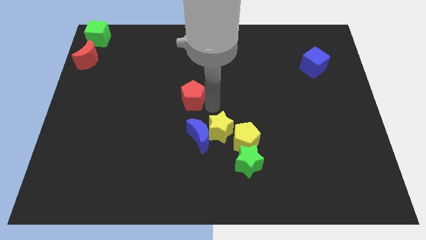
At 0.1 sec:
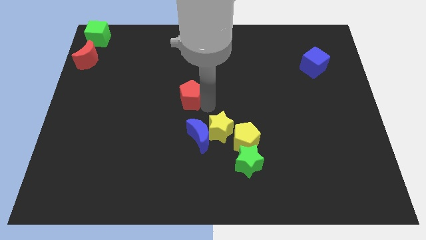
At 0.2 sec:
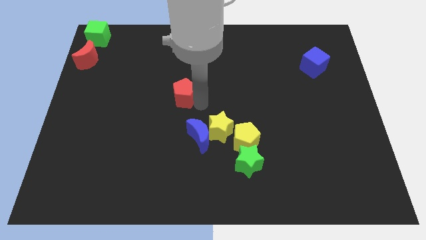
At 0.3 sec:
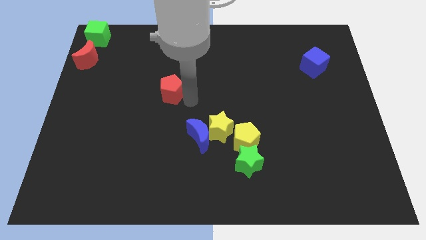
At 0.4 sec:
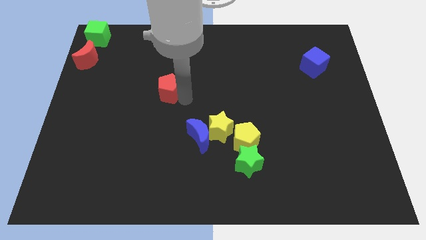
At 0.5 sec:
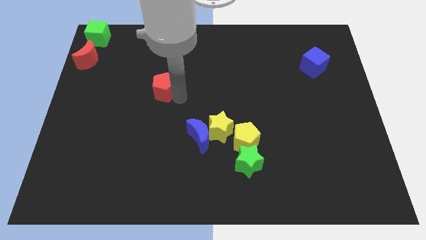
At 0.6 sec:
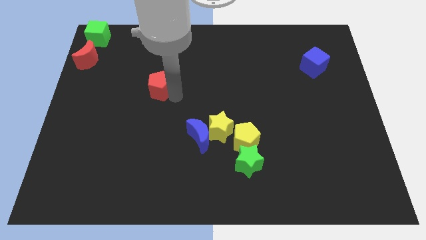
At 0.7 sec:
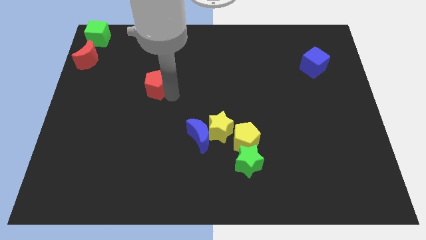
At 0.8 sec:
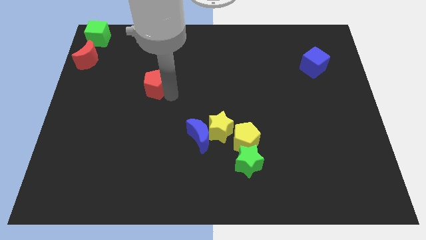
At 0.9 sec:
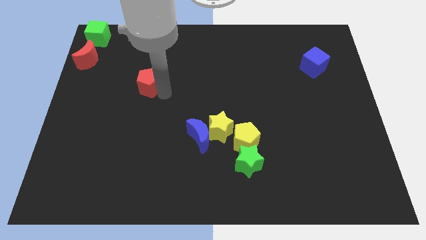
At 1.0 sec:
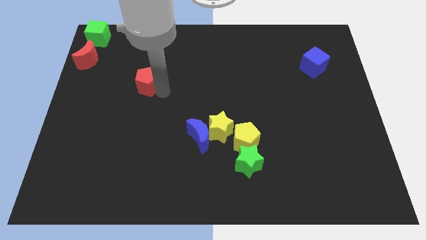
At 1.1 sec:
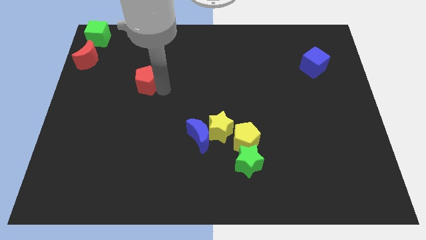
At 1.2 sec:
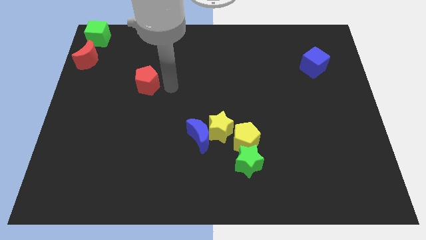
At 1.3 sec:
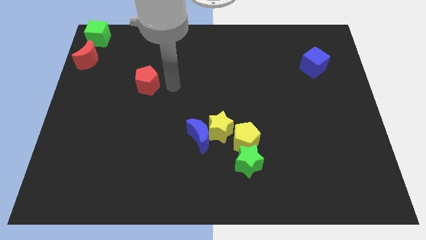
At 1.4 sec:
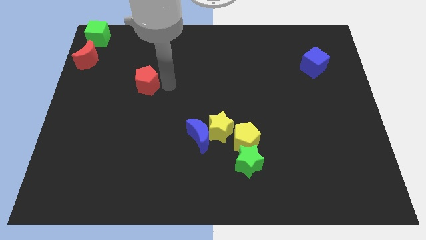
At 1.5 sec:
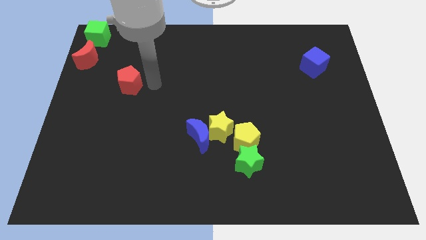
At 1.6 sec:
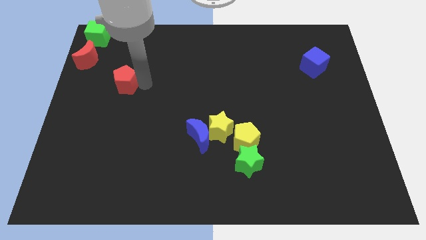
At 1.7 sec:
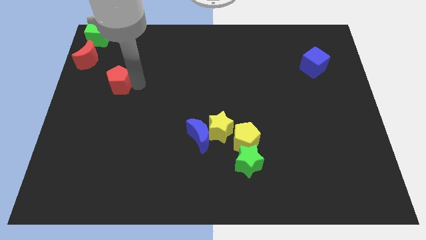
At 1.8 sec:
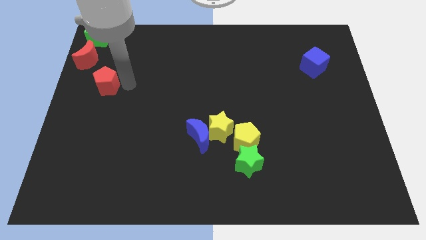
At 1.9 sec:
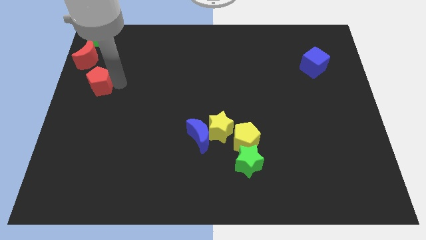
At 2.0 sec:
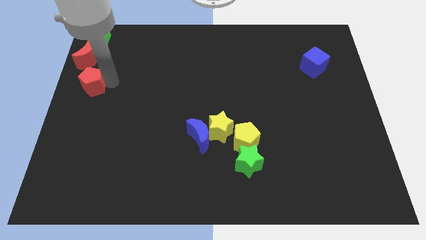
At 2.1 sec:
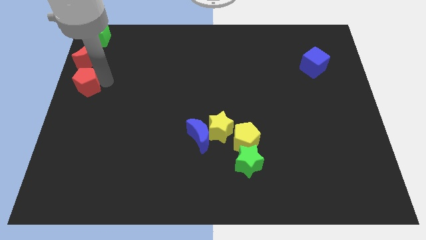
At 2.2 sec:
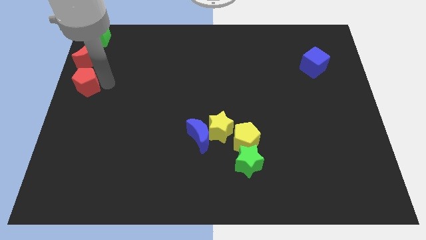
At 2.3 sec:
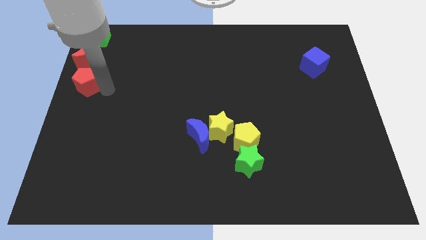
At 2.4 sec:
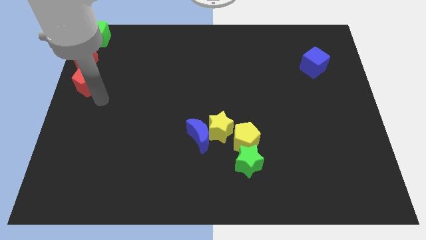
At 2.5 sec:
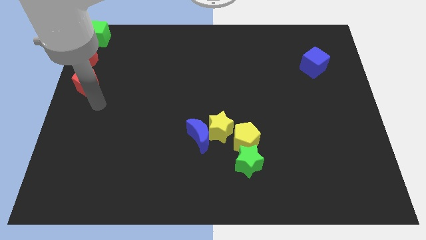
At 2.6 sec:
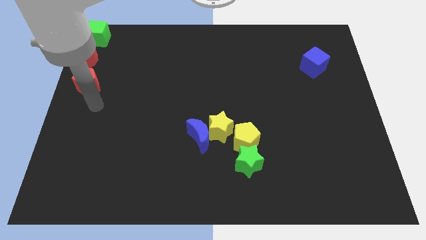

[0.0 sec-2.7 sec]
push the red pentagon to the bottom of the red crescent

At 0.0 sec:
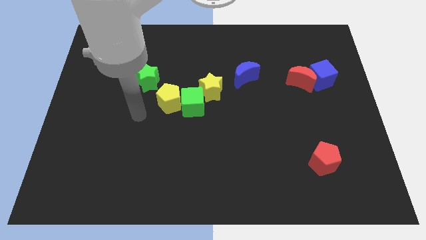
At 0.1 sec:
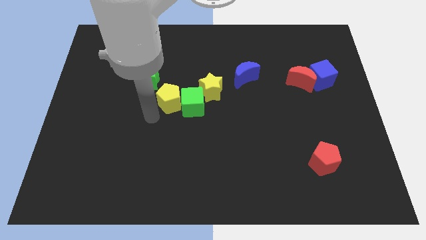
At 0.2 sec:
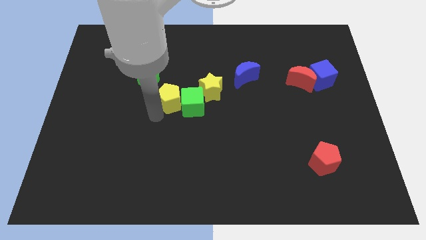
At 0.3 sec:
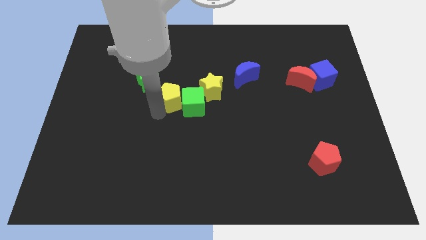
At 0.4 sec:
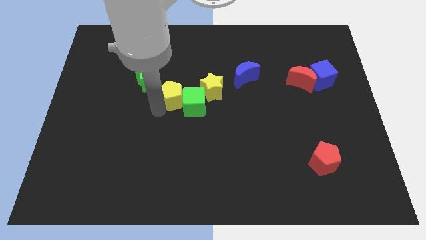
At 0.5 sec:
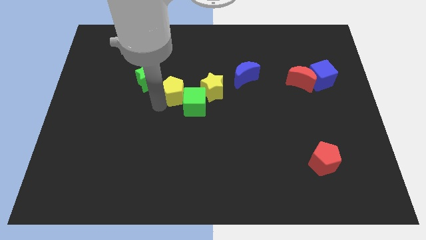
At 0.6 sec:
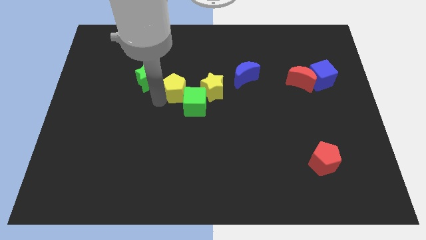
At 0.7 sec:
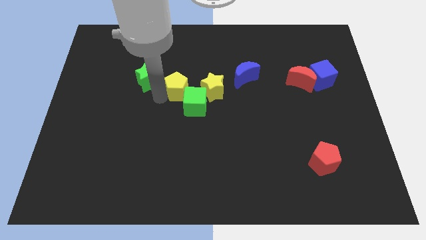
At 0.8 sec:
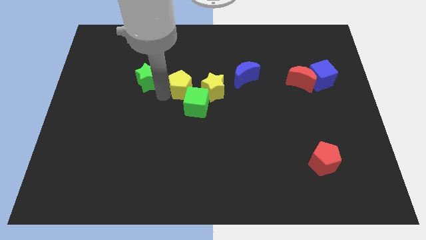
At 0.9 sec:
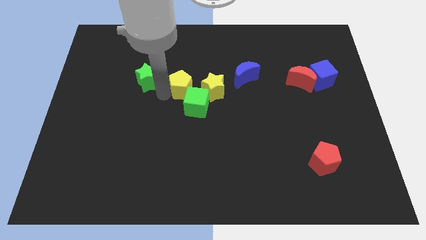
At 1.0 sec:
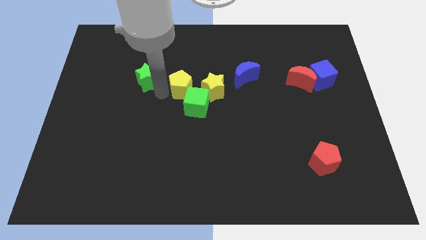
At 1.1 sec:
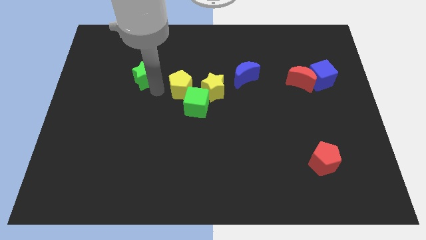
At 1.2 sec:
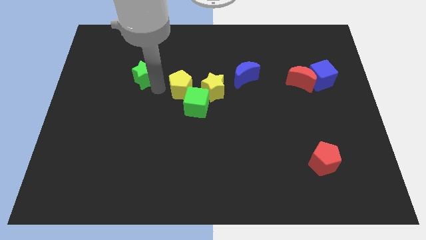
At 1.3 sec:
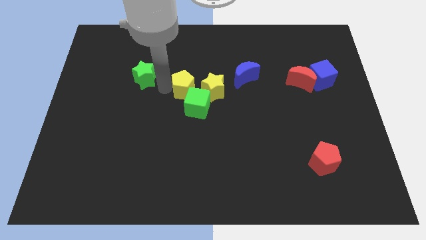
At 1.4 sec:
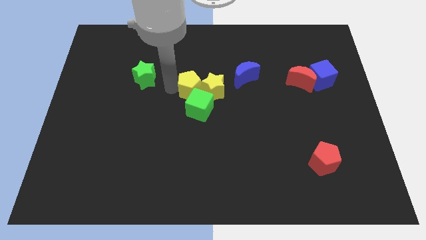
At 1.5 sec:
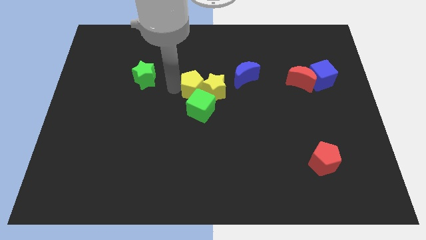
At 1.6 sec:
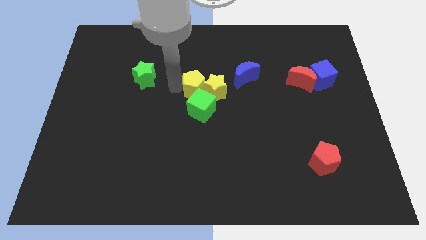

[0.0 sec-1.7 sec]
move the yellow pentagon into the left side of the yellow star

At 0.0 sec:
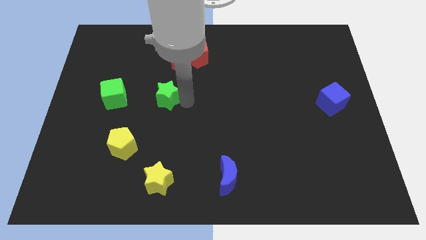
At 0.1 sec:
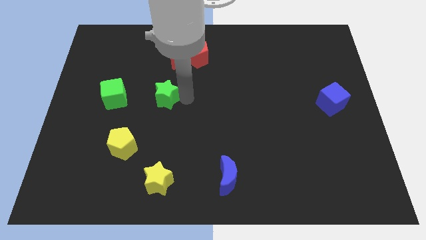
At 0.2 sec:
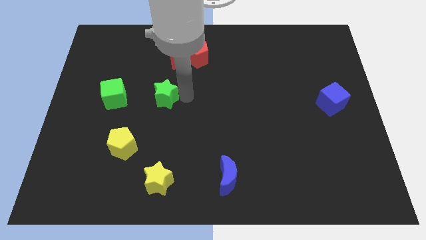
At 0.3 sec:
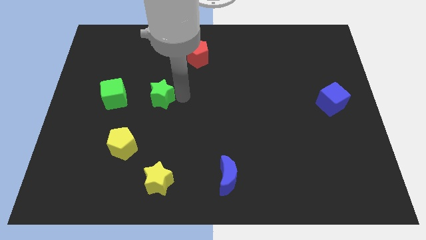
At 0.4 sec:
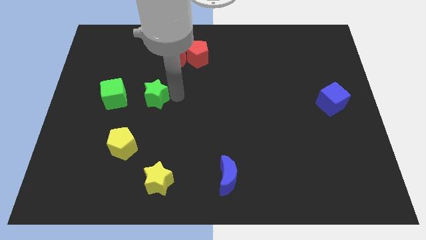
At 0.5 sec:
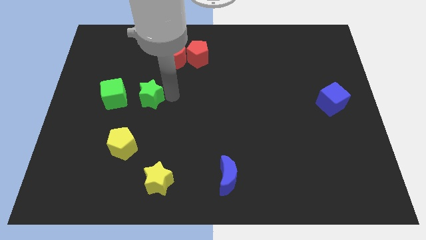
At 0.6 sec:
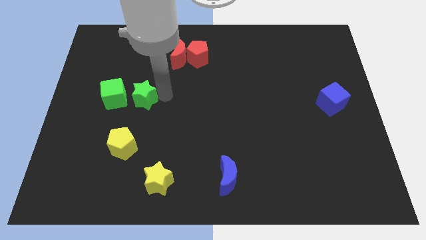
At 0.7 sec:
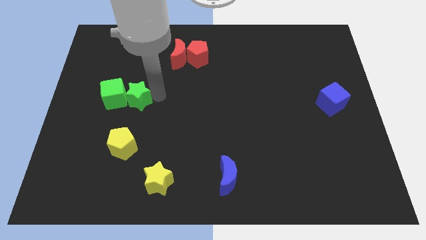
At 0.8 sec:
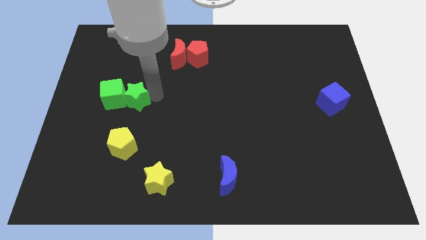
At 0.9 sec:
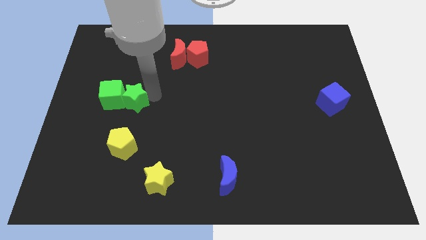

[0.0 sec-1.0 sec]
push the green star to the right of the green cube

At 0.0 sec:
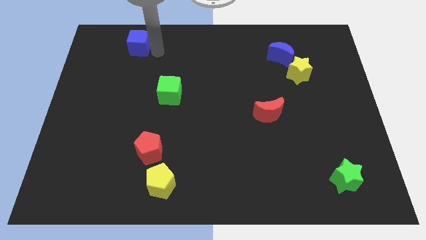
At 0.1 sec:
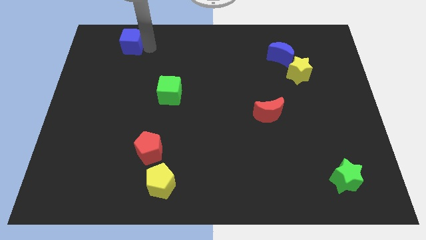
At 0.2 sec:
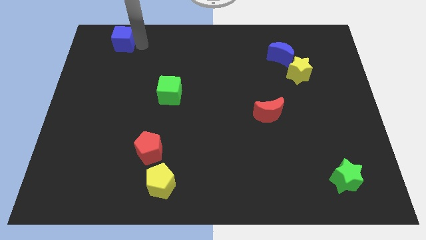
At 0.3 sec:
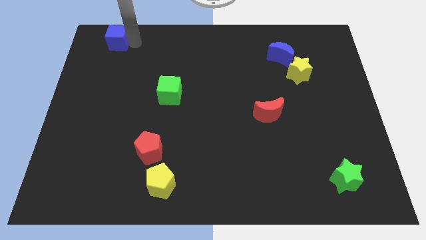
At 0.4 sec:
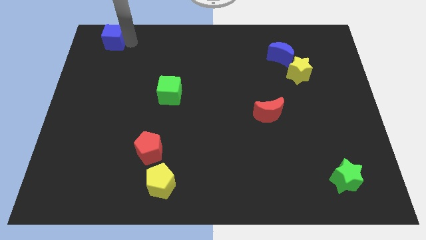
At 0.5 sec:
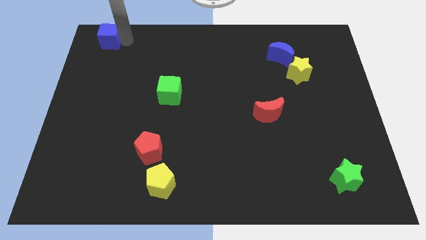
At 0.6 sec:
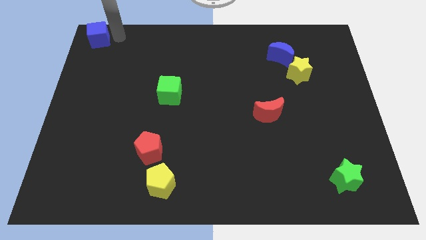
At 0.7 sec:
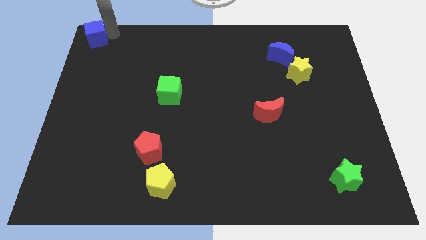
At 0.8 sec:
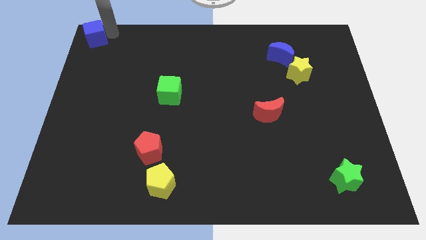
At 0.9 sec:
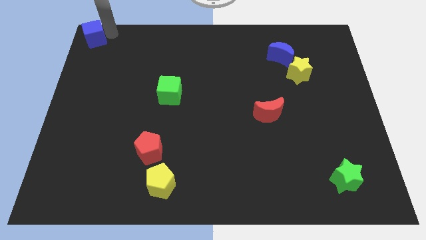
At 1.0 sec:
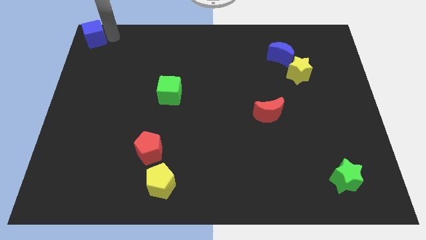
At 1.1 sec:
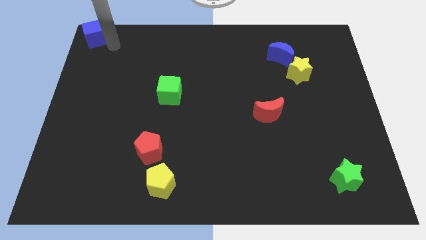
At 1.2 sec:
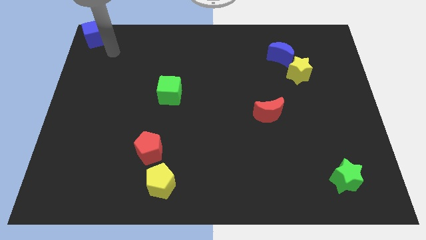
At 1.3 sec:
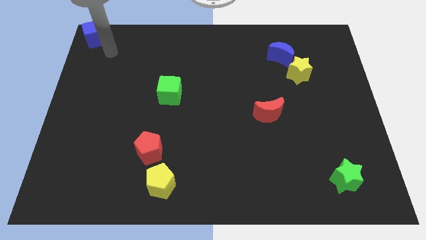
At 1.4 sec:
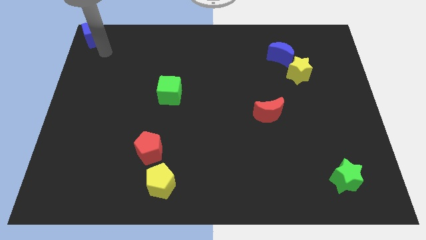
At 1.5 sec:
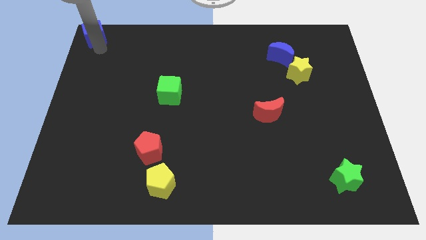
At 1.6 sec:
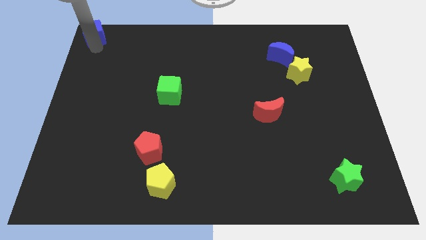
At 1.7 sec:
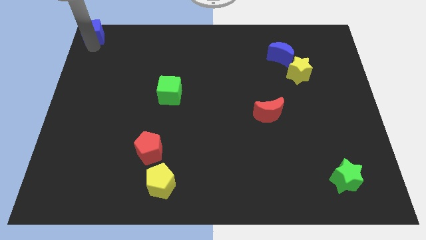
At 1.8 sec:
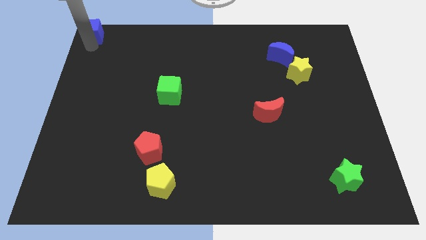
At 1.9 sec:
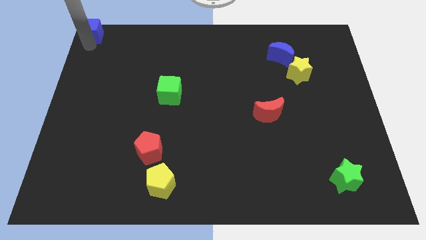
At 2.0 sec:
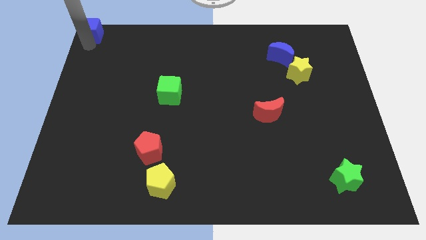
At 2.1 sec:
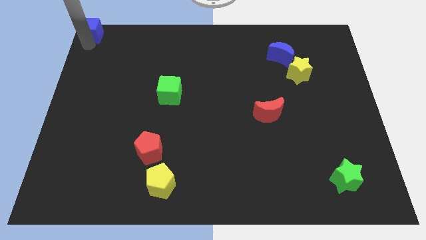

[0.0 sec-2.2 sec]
move the blue cube to the top left

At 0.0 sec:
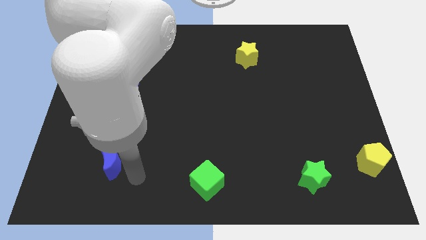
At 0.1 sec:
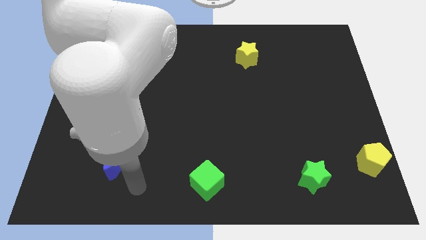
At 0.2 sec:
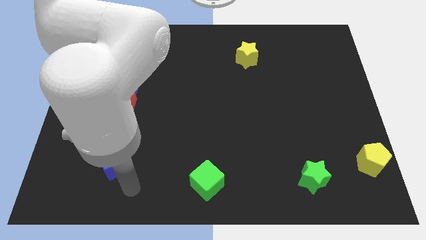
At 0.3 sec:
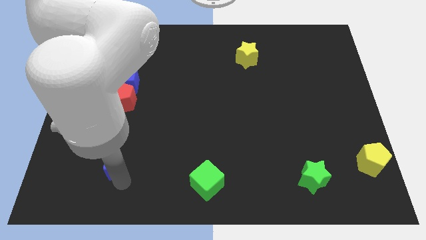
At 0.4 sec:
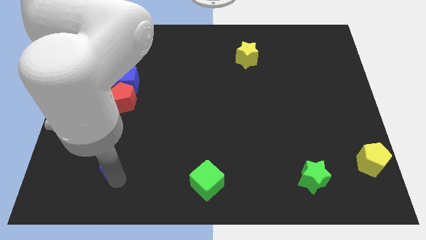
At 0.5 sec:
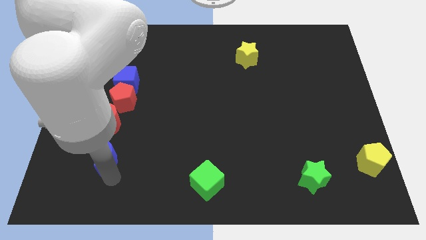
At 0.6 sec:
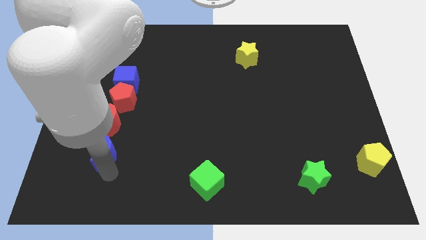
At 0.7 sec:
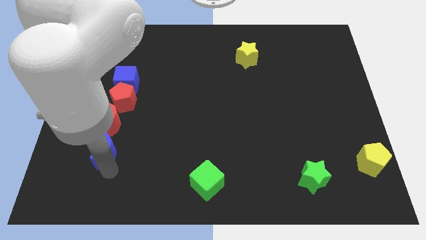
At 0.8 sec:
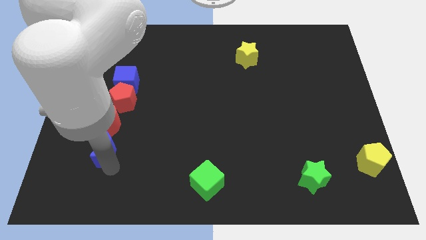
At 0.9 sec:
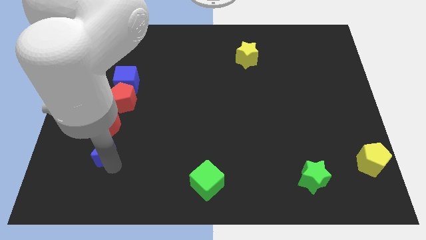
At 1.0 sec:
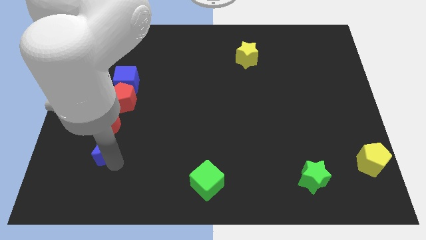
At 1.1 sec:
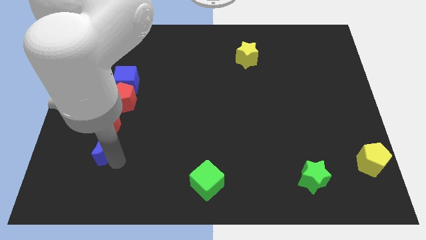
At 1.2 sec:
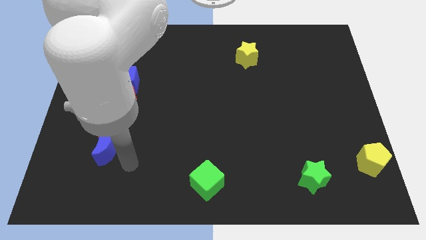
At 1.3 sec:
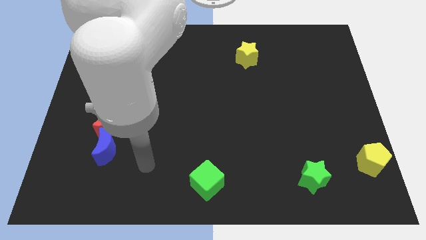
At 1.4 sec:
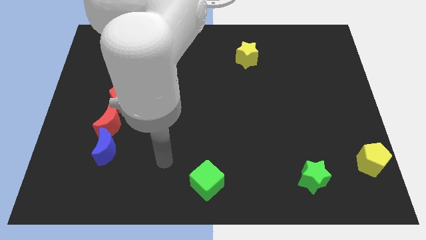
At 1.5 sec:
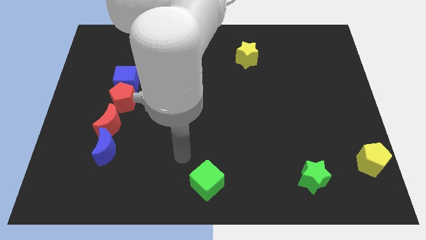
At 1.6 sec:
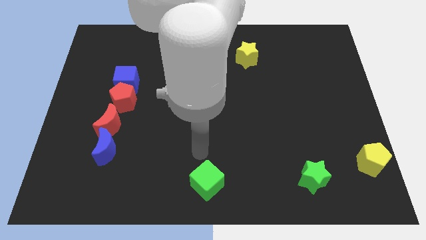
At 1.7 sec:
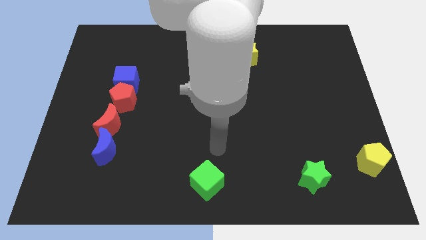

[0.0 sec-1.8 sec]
place the blue moon below the red moon
